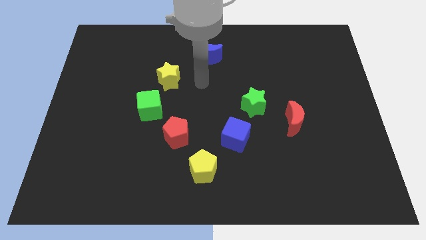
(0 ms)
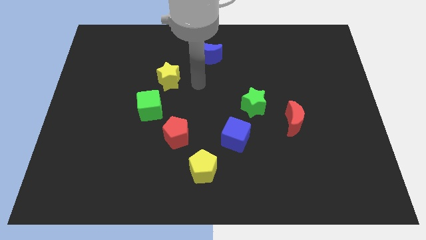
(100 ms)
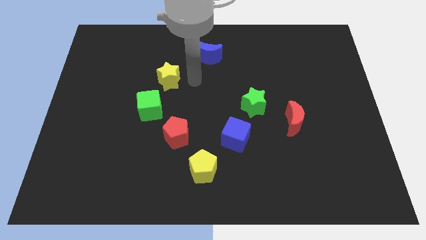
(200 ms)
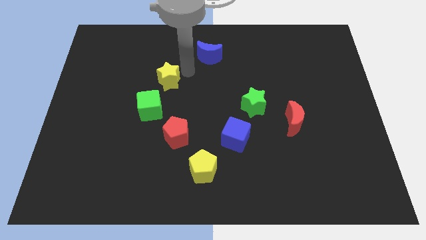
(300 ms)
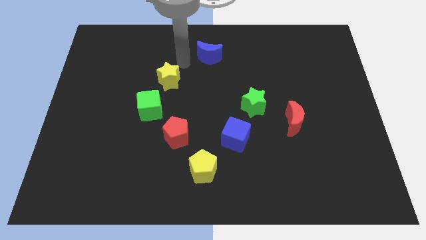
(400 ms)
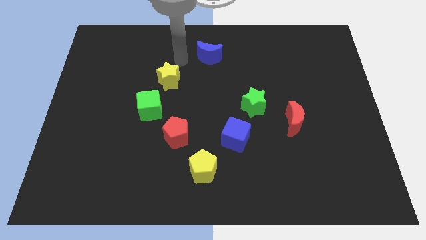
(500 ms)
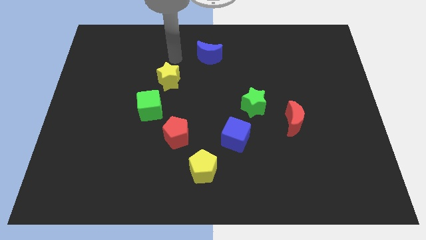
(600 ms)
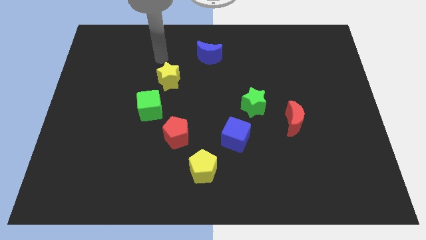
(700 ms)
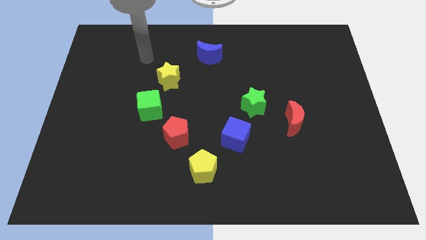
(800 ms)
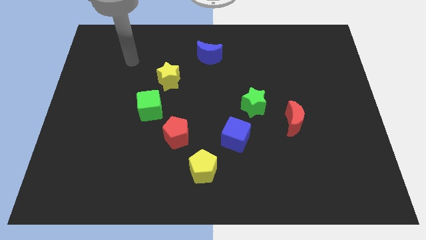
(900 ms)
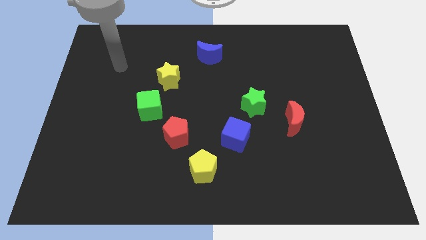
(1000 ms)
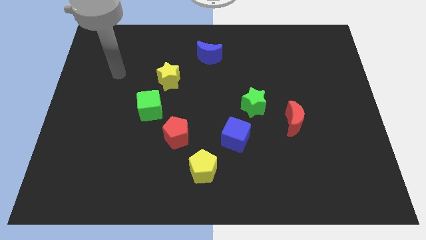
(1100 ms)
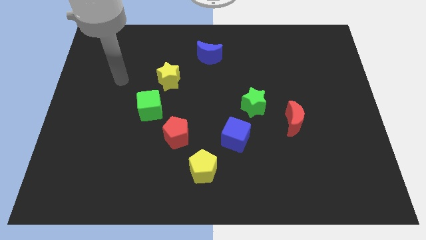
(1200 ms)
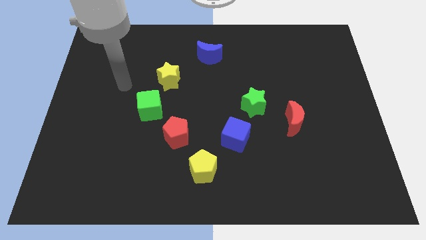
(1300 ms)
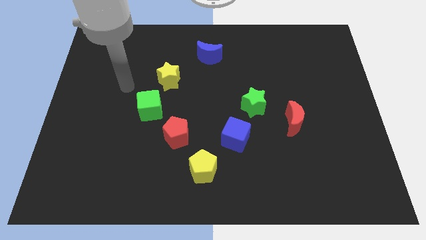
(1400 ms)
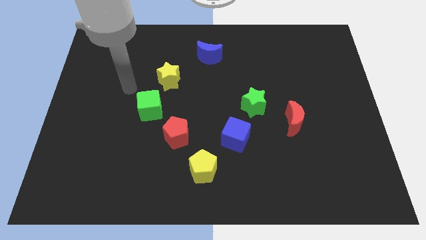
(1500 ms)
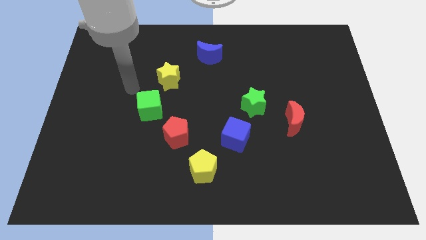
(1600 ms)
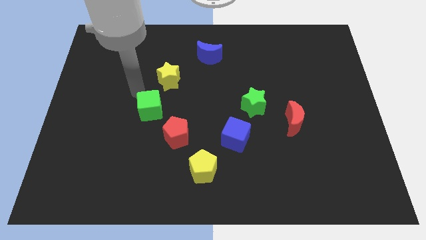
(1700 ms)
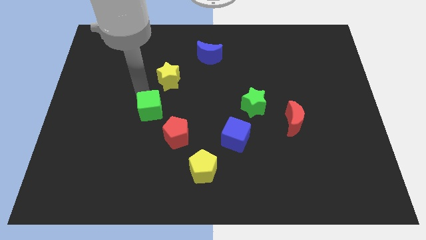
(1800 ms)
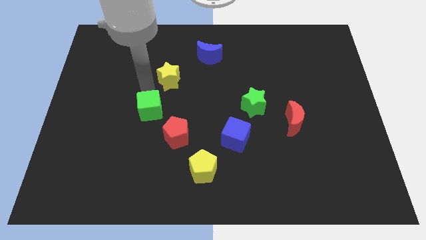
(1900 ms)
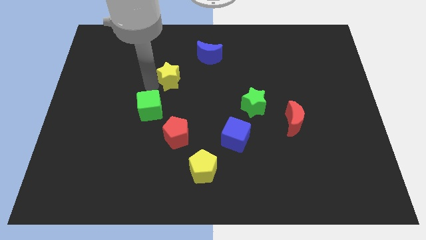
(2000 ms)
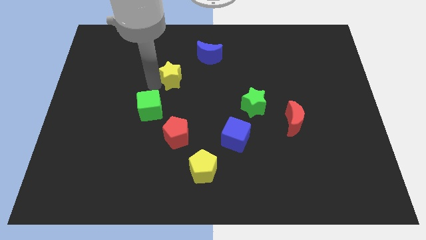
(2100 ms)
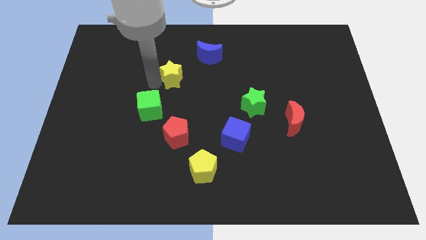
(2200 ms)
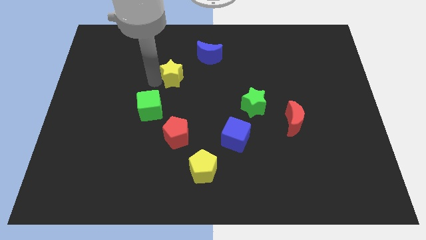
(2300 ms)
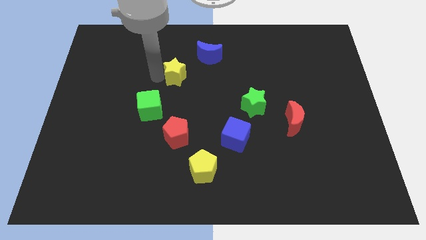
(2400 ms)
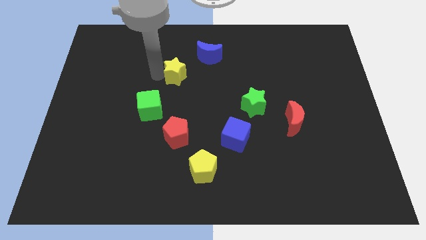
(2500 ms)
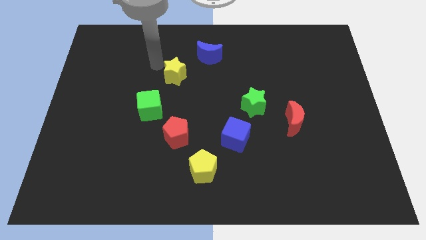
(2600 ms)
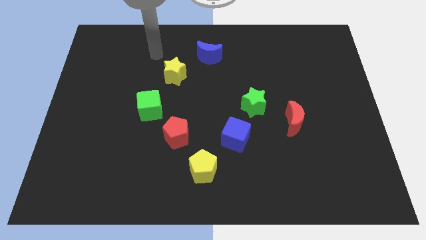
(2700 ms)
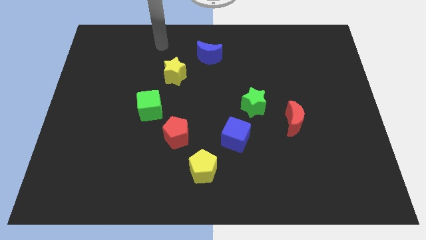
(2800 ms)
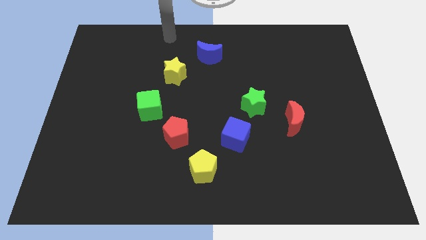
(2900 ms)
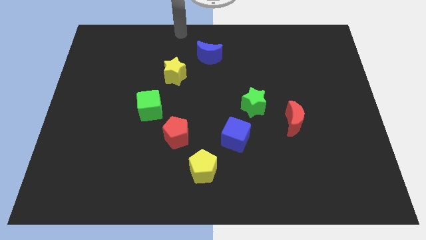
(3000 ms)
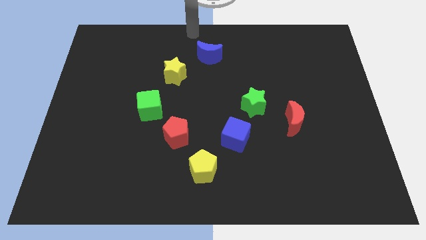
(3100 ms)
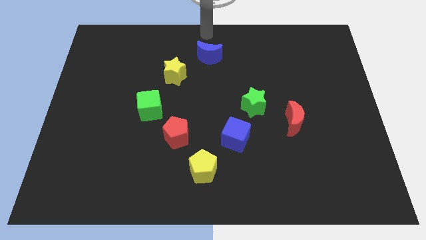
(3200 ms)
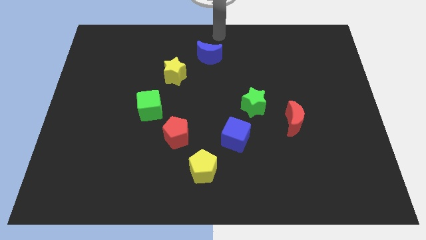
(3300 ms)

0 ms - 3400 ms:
push the yellow star towards the bottom left side of blue moon

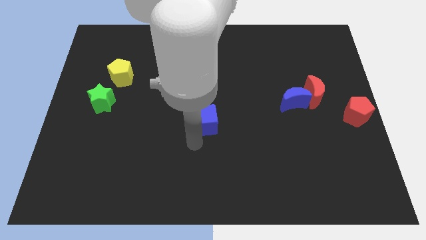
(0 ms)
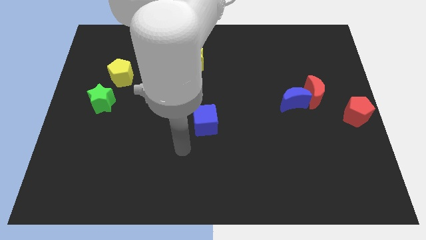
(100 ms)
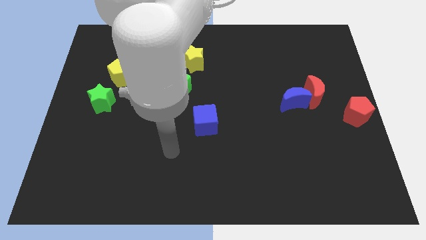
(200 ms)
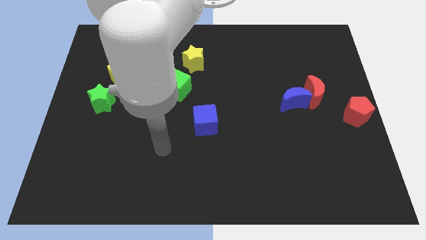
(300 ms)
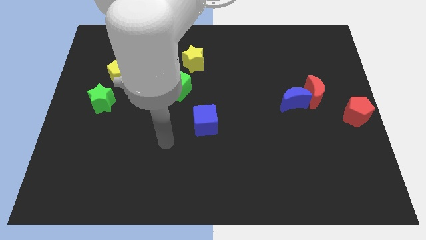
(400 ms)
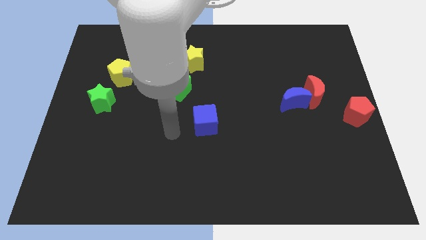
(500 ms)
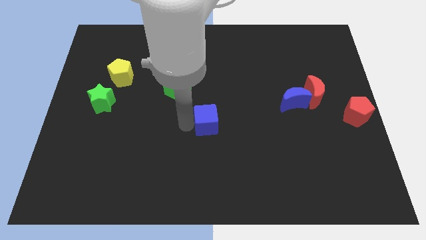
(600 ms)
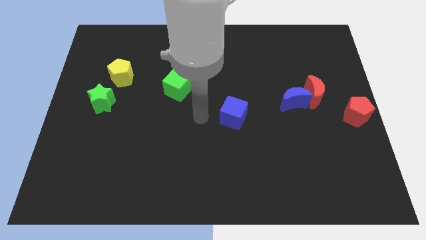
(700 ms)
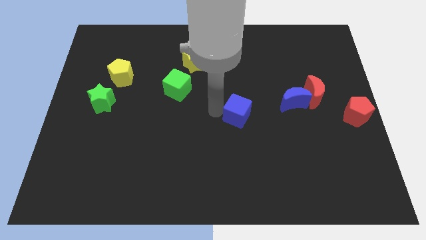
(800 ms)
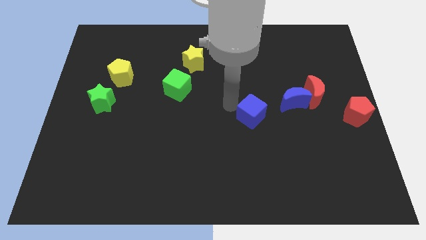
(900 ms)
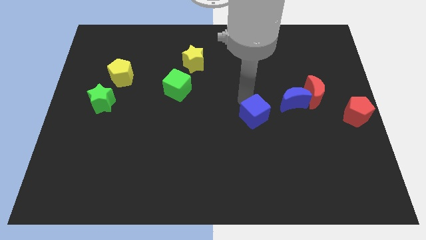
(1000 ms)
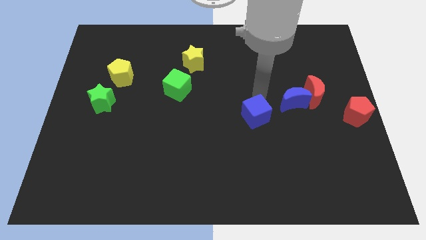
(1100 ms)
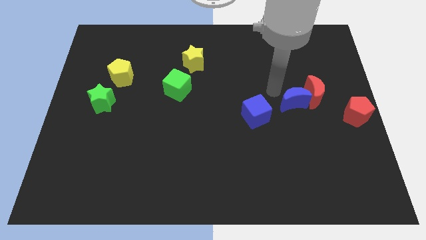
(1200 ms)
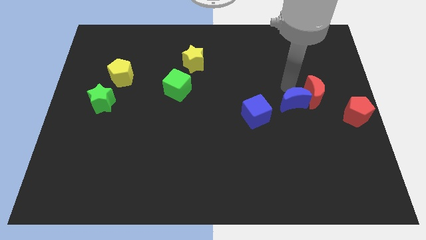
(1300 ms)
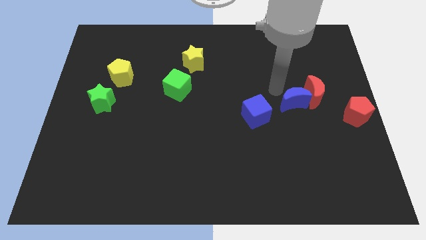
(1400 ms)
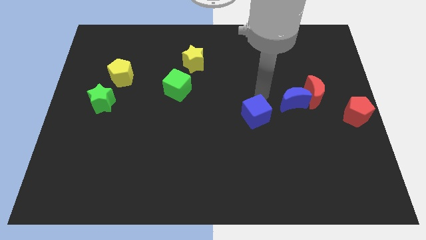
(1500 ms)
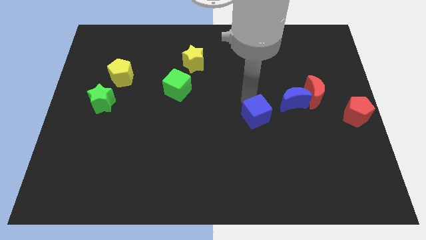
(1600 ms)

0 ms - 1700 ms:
push the blue cube to the left of blue moon

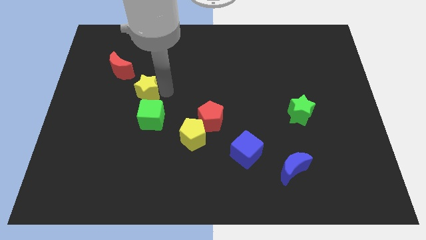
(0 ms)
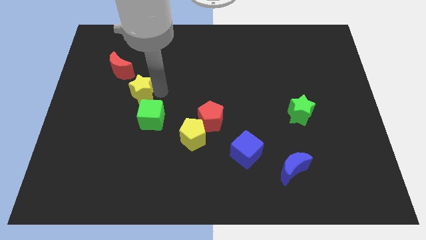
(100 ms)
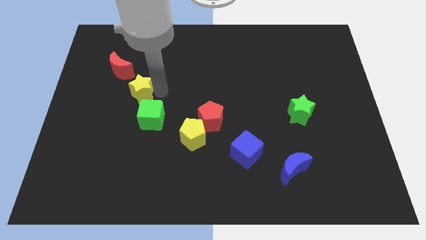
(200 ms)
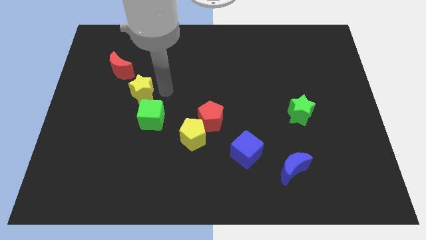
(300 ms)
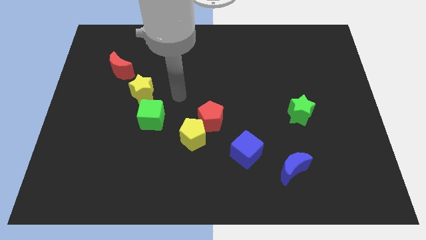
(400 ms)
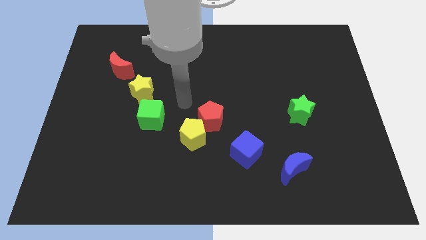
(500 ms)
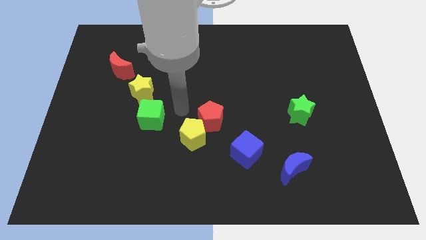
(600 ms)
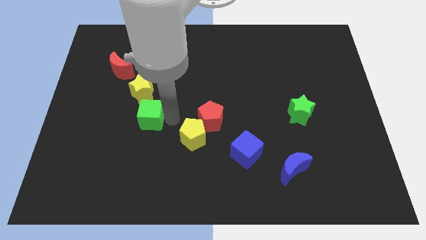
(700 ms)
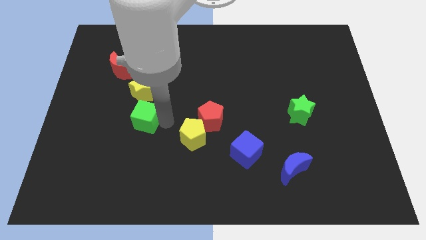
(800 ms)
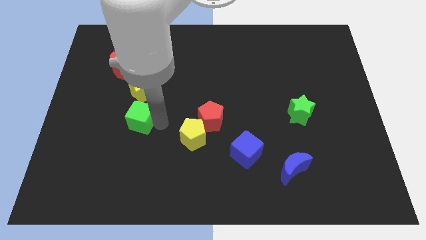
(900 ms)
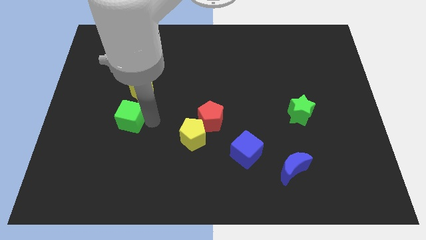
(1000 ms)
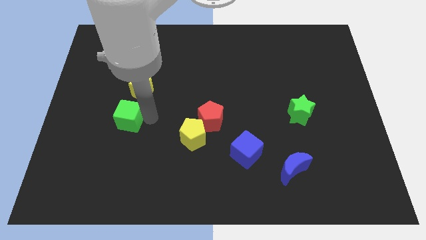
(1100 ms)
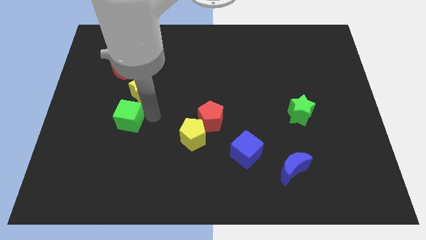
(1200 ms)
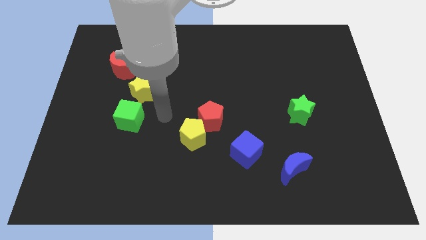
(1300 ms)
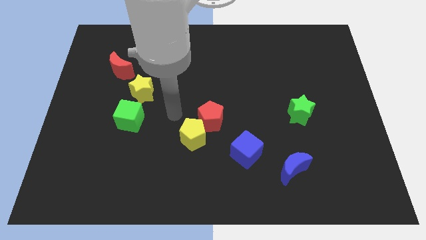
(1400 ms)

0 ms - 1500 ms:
place your hand in between the green cube and red pentagon

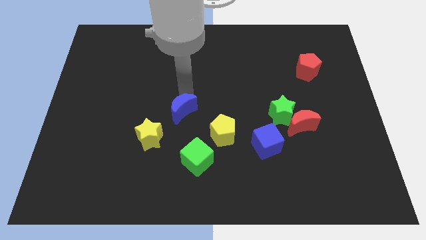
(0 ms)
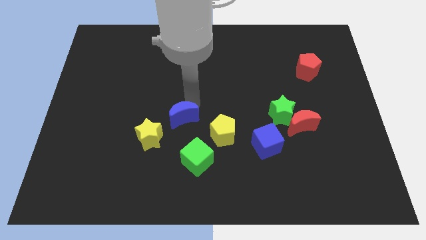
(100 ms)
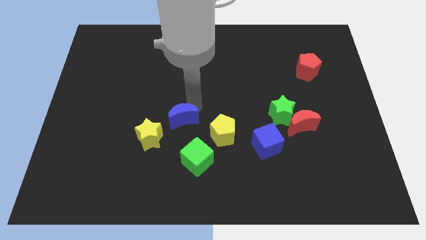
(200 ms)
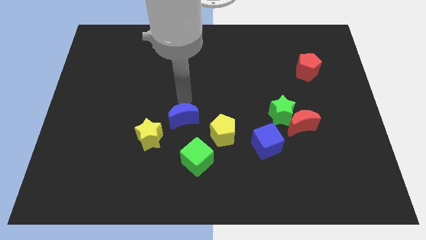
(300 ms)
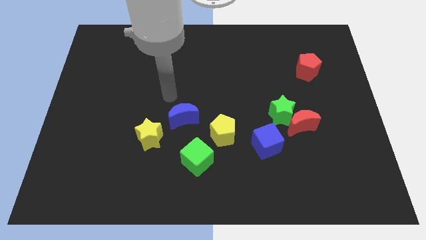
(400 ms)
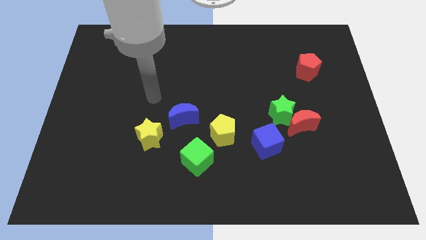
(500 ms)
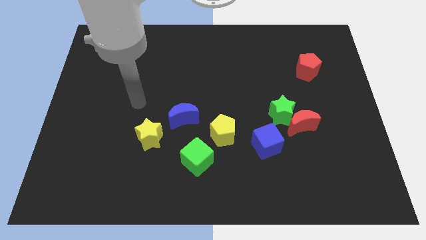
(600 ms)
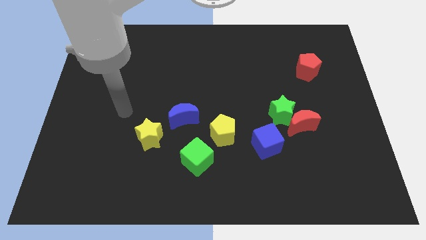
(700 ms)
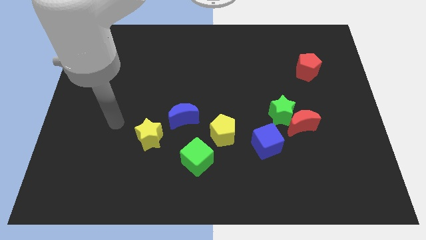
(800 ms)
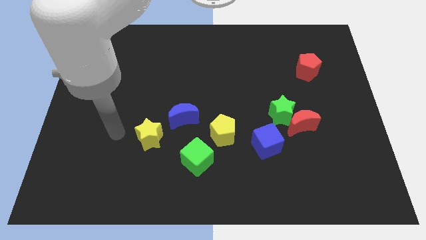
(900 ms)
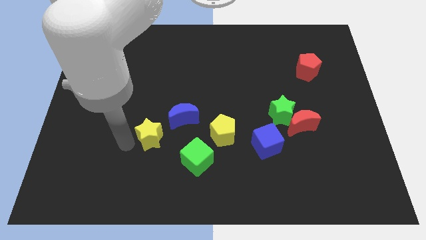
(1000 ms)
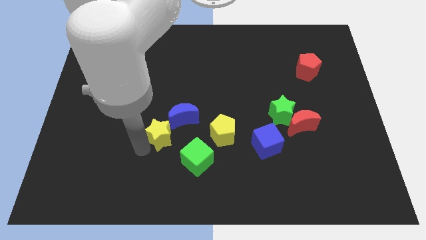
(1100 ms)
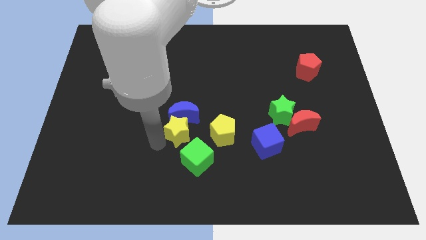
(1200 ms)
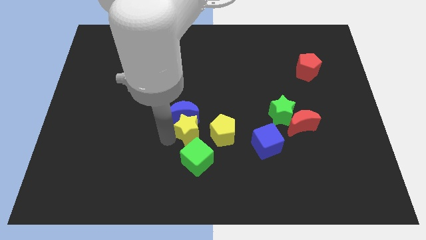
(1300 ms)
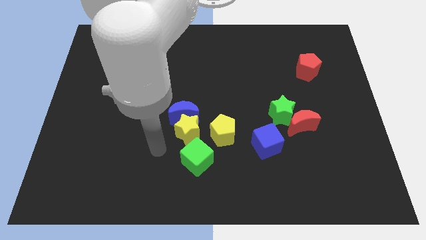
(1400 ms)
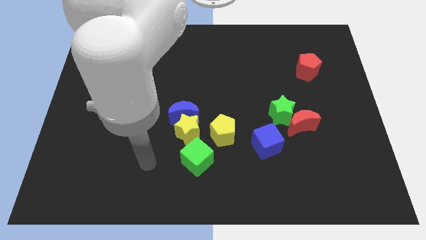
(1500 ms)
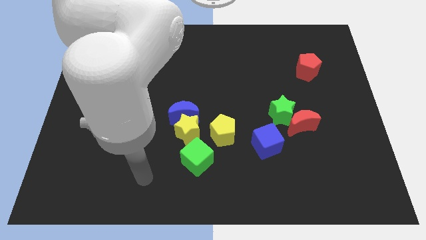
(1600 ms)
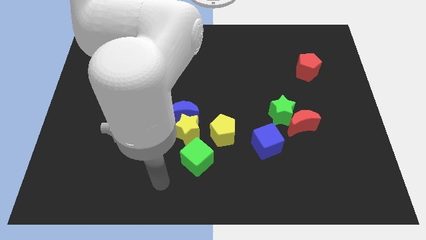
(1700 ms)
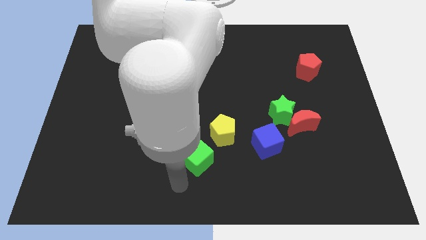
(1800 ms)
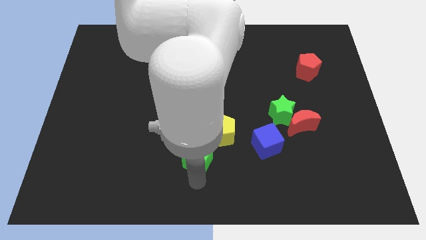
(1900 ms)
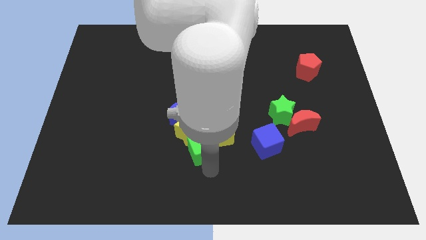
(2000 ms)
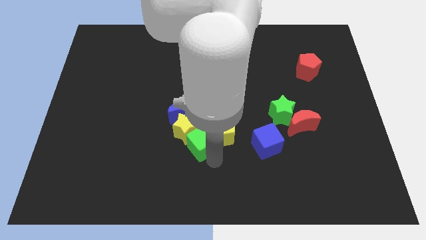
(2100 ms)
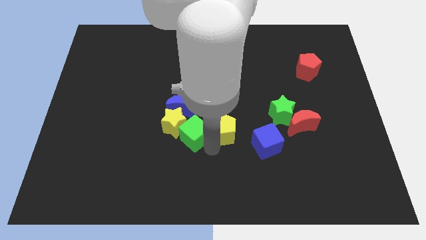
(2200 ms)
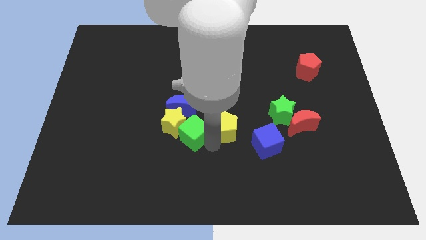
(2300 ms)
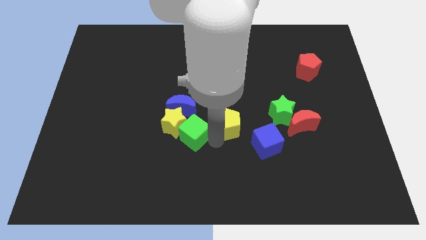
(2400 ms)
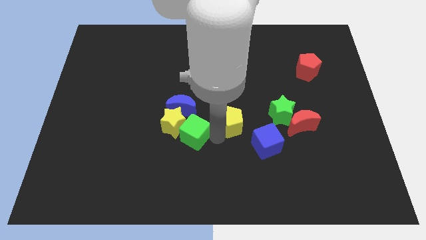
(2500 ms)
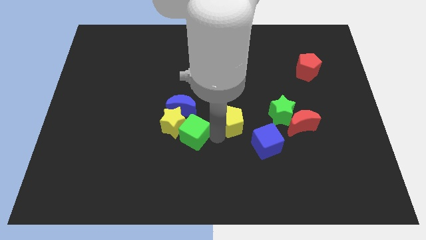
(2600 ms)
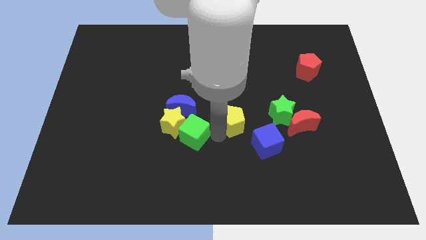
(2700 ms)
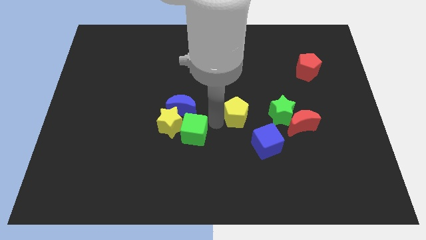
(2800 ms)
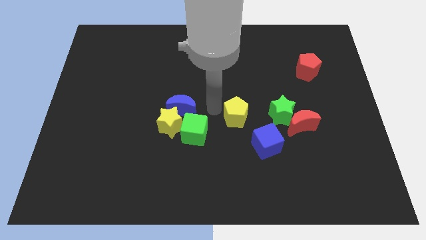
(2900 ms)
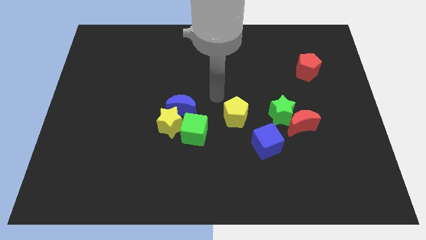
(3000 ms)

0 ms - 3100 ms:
group up the blue crescent yellow star and green cube at the center of the board
